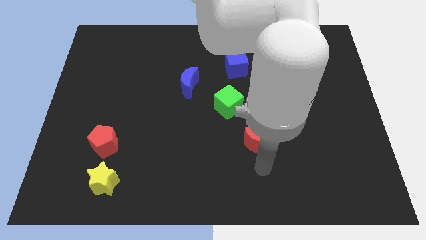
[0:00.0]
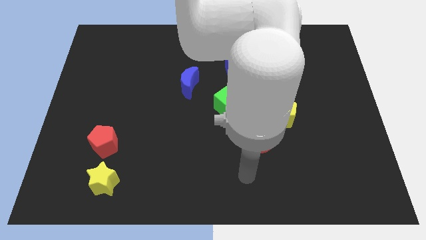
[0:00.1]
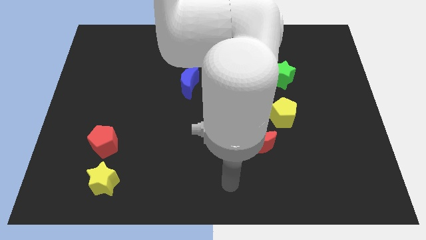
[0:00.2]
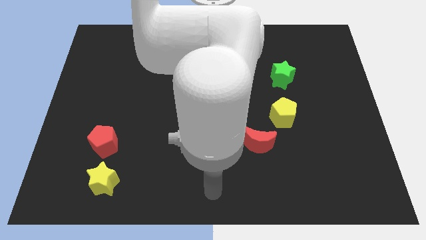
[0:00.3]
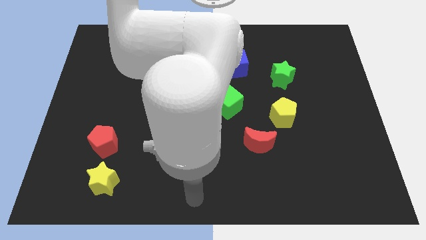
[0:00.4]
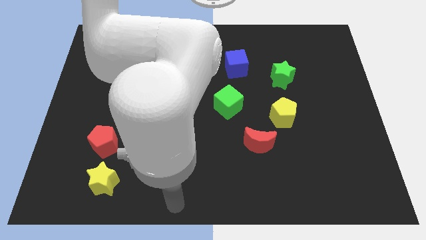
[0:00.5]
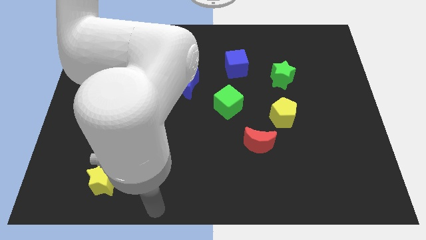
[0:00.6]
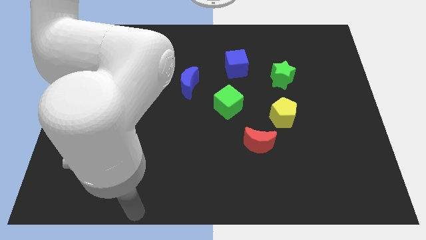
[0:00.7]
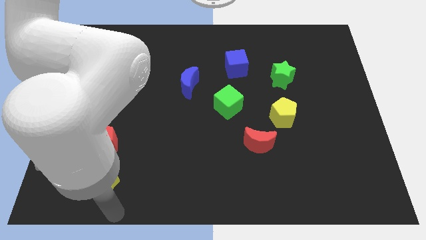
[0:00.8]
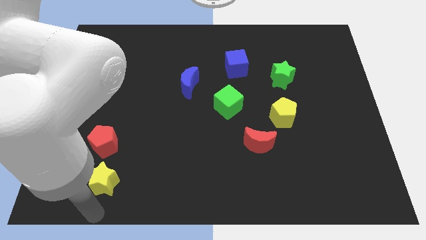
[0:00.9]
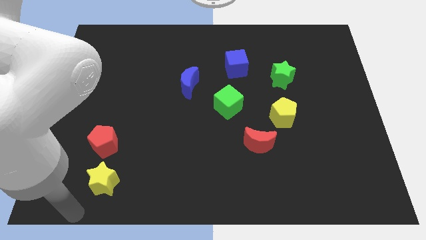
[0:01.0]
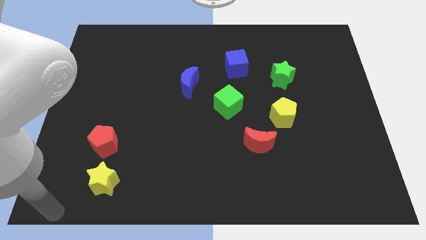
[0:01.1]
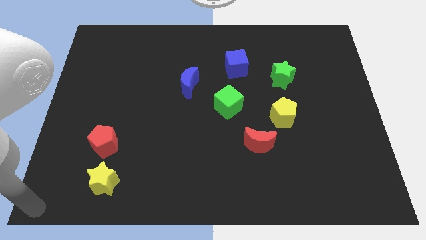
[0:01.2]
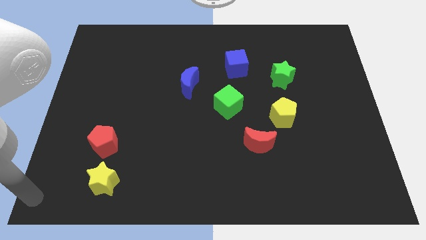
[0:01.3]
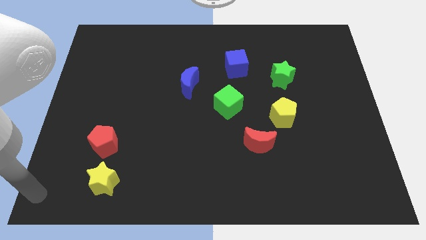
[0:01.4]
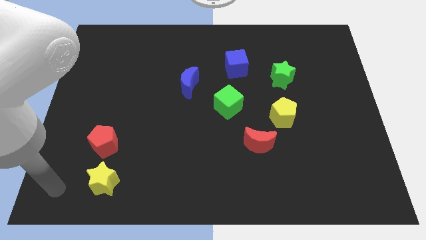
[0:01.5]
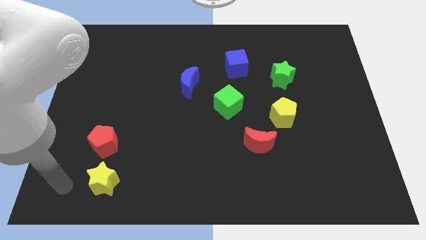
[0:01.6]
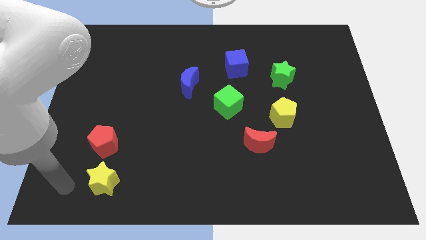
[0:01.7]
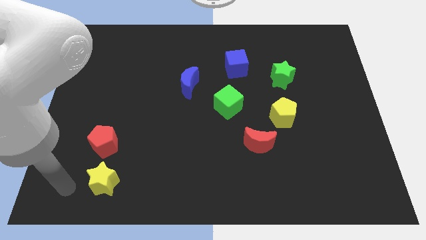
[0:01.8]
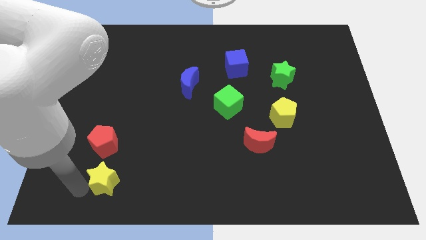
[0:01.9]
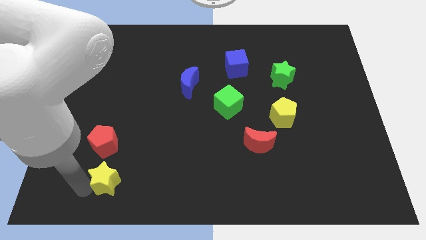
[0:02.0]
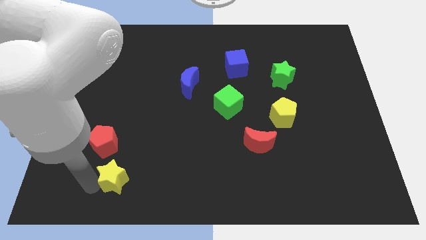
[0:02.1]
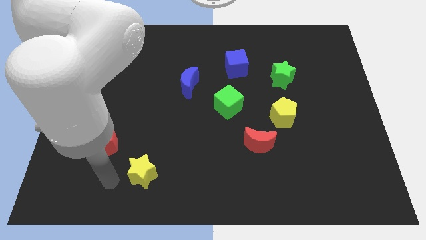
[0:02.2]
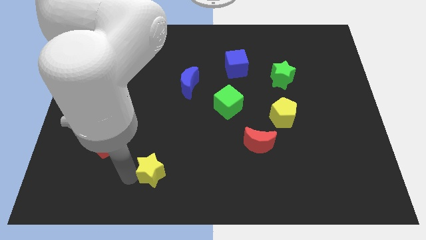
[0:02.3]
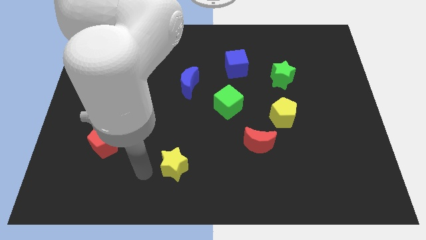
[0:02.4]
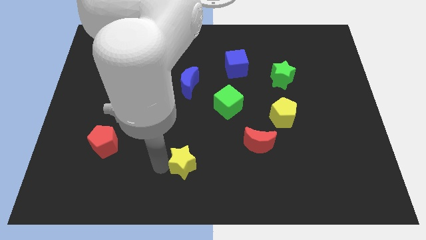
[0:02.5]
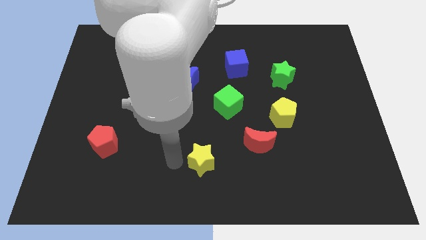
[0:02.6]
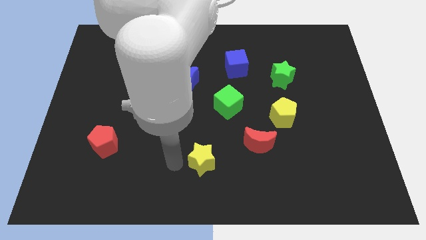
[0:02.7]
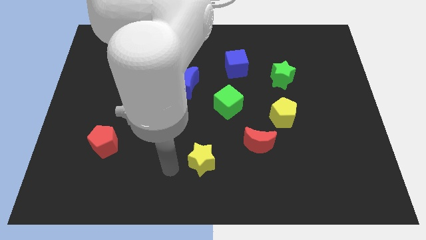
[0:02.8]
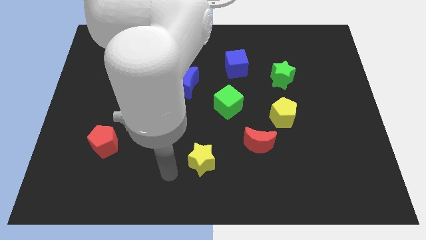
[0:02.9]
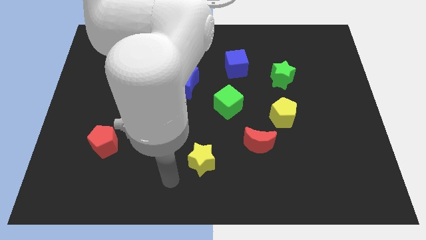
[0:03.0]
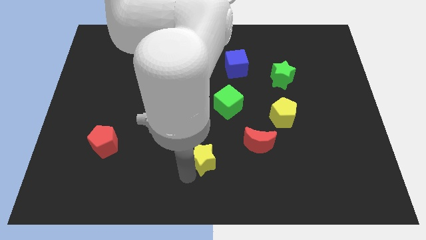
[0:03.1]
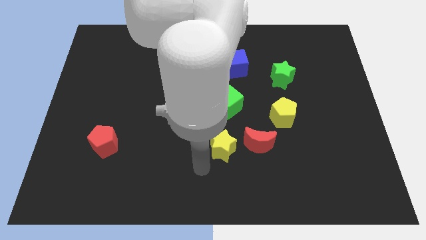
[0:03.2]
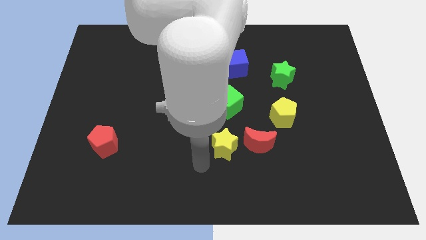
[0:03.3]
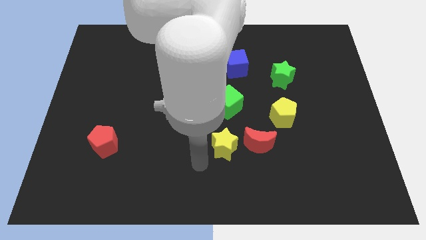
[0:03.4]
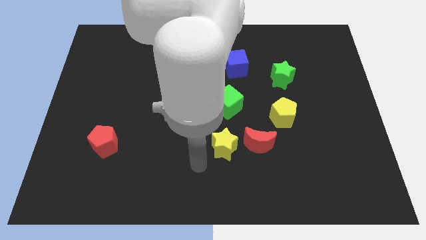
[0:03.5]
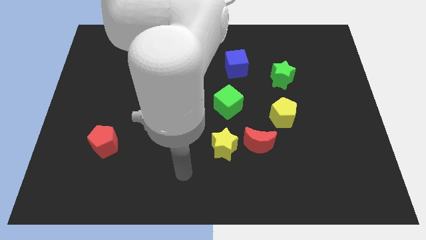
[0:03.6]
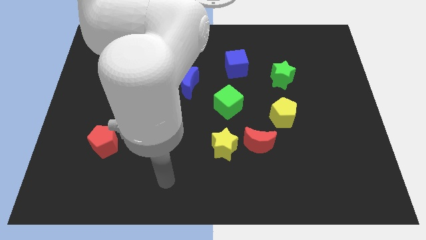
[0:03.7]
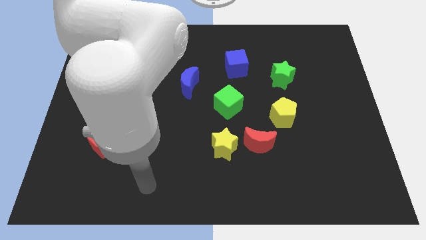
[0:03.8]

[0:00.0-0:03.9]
push the yellow star to the left side of the red crescent

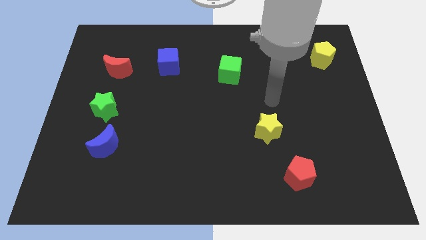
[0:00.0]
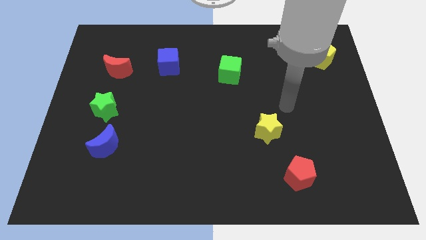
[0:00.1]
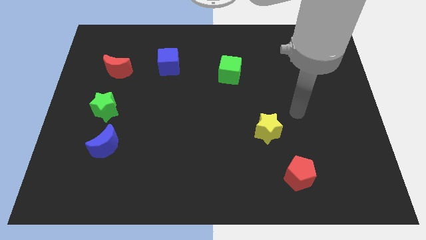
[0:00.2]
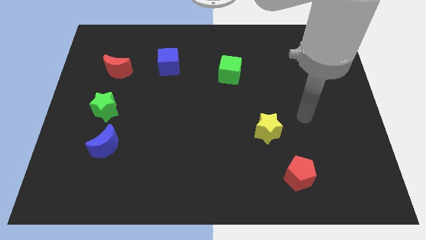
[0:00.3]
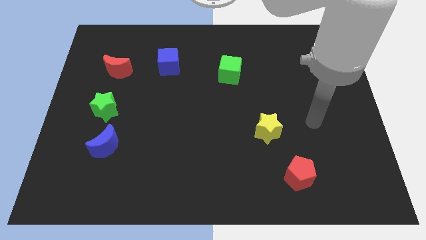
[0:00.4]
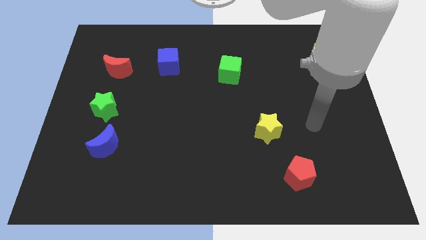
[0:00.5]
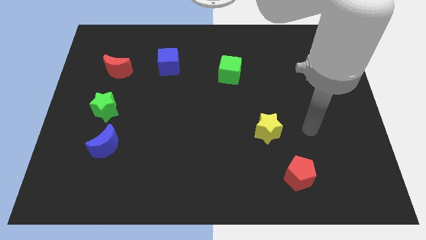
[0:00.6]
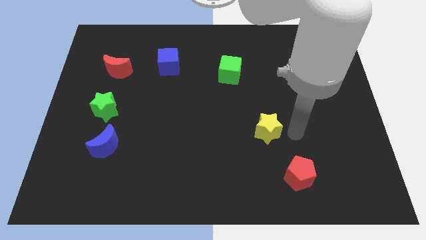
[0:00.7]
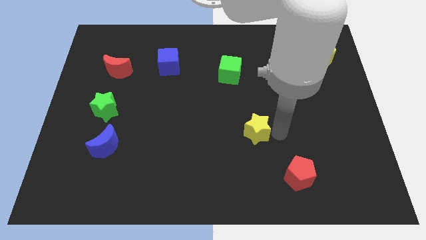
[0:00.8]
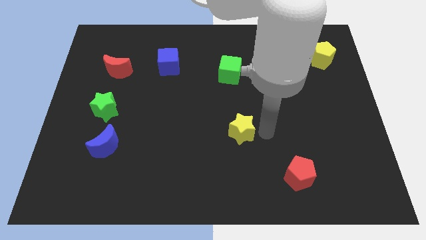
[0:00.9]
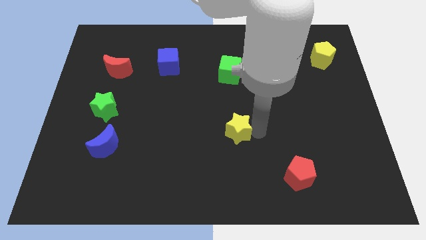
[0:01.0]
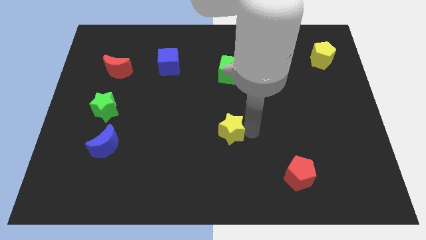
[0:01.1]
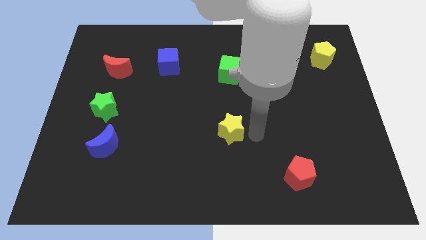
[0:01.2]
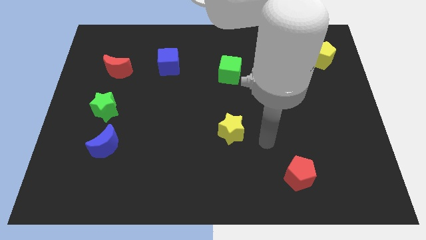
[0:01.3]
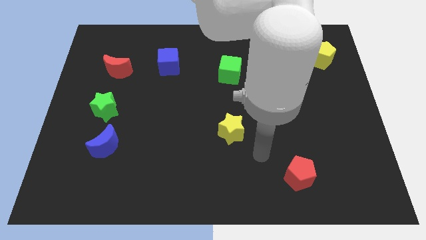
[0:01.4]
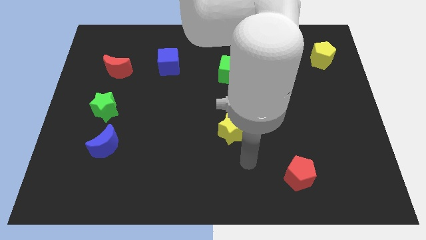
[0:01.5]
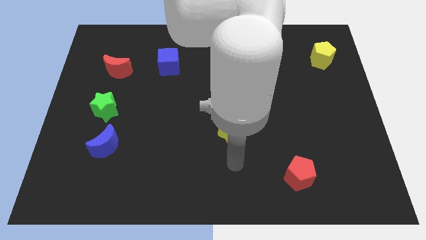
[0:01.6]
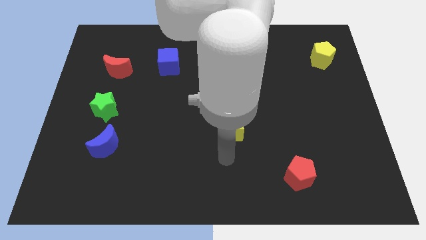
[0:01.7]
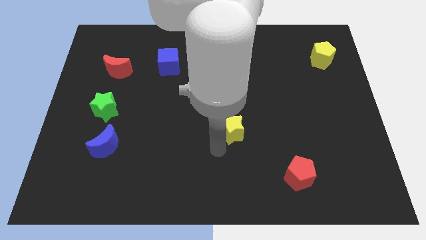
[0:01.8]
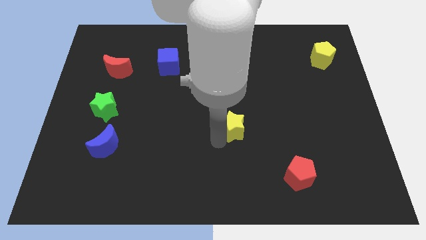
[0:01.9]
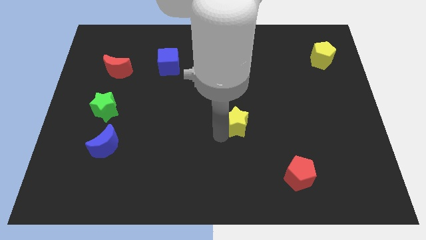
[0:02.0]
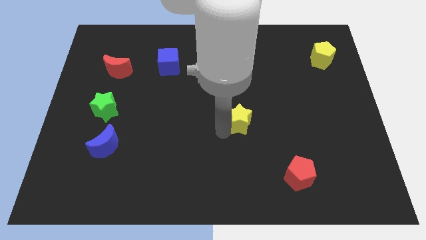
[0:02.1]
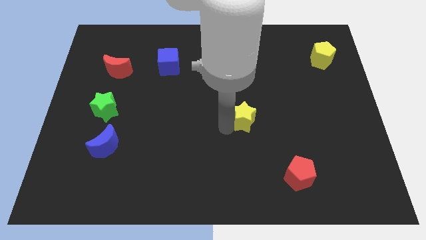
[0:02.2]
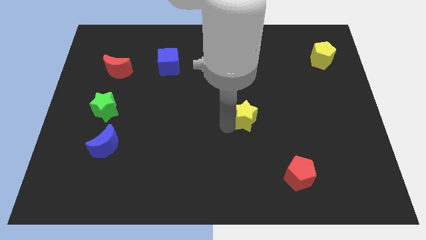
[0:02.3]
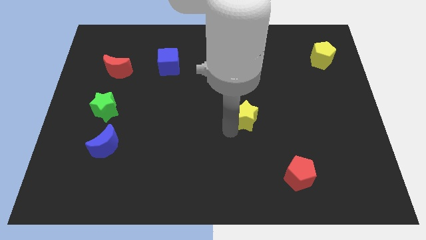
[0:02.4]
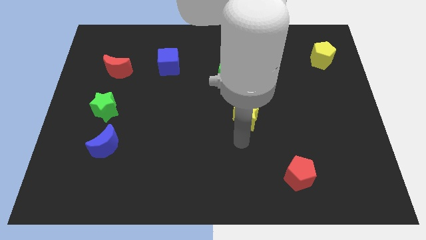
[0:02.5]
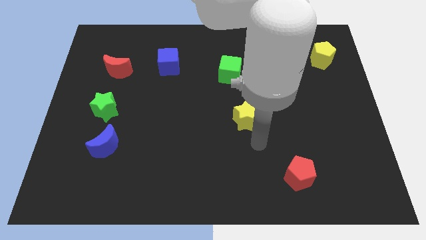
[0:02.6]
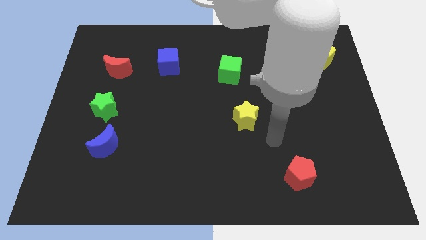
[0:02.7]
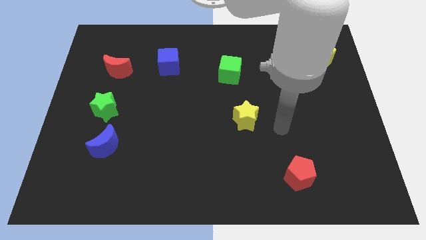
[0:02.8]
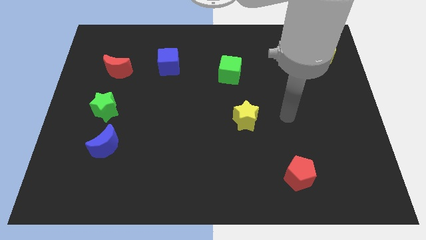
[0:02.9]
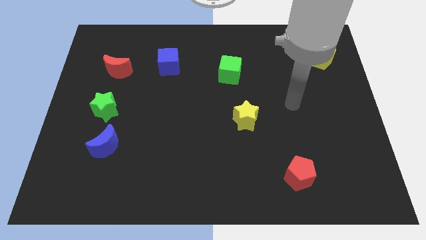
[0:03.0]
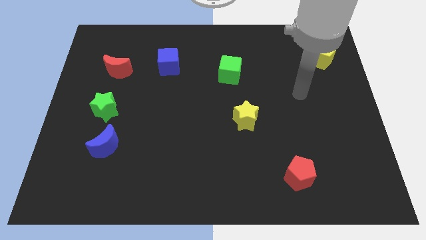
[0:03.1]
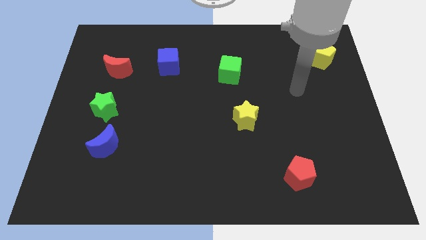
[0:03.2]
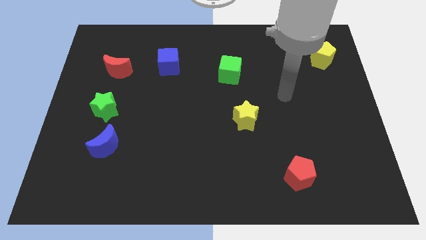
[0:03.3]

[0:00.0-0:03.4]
push yellow star slightly towards top of the board

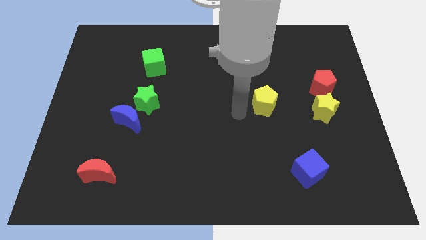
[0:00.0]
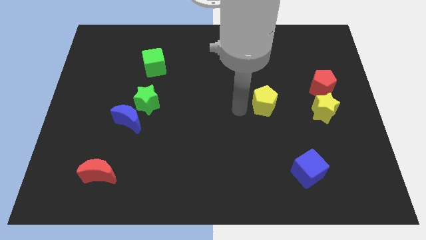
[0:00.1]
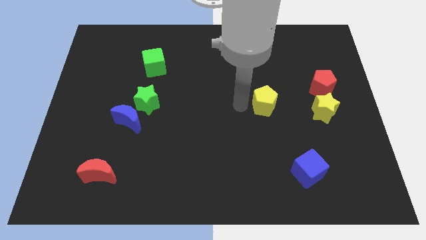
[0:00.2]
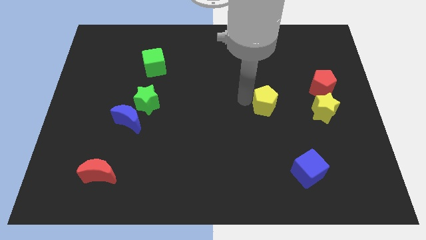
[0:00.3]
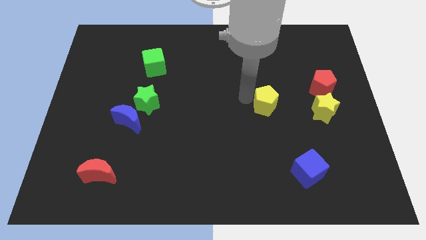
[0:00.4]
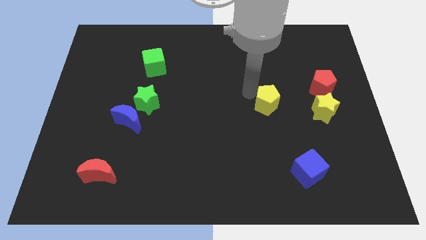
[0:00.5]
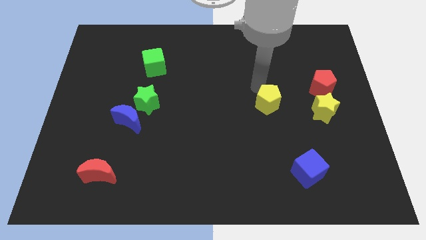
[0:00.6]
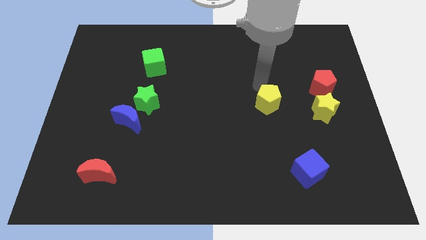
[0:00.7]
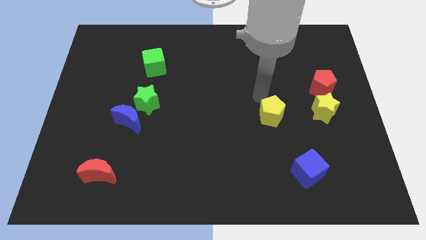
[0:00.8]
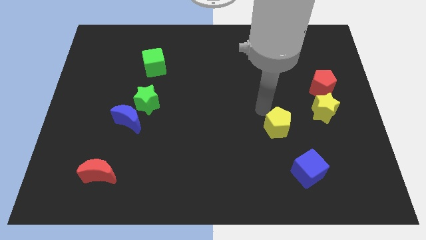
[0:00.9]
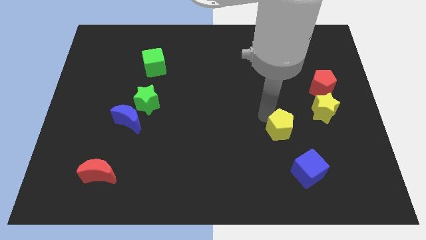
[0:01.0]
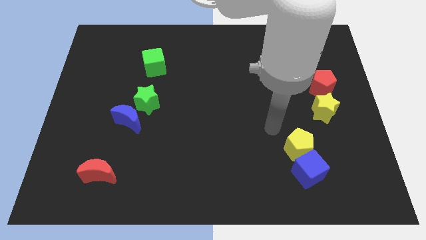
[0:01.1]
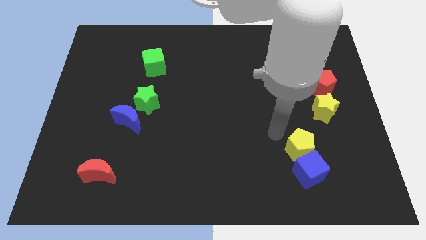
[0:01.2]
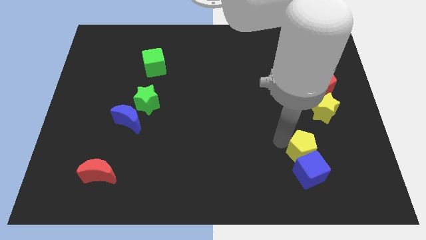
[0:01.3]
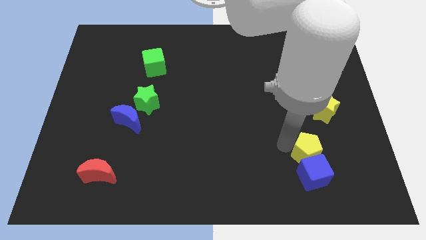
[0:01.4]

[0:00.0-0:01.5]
push the yellow pentagon to the top left side of the blue cube

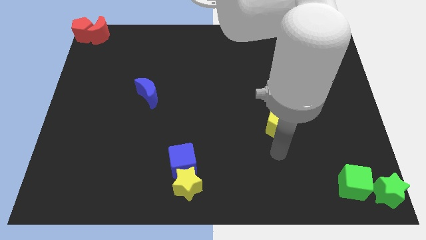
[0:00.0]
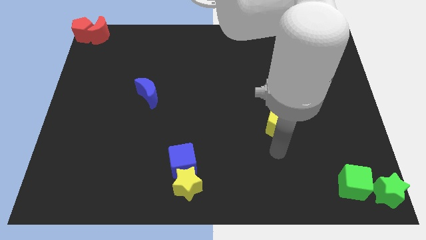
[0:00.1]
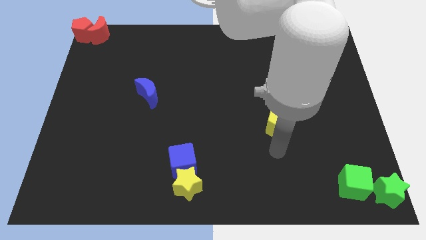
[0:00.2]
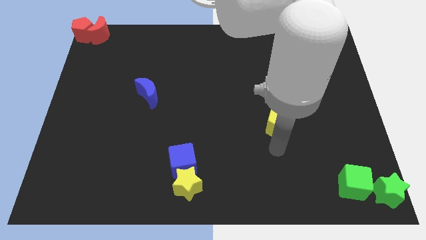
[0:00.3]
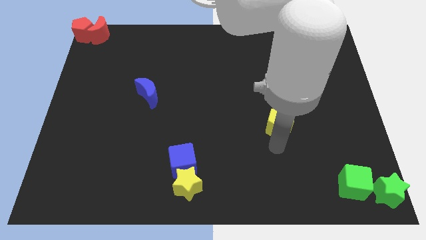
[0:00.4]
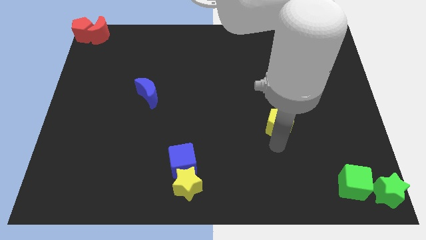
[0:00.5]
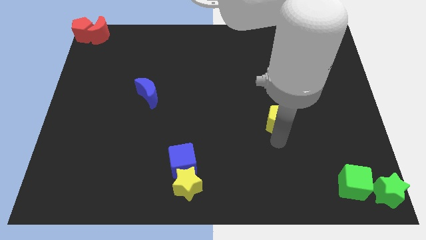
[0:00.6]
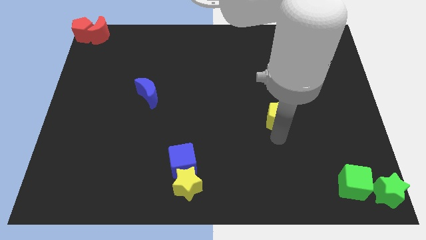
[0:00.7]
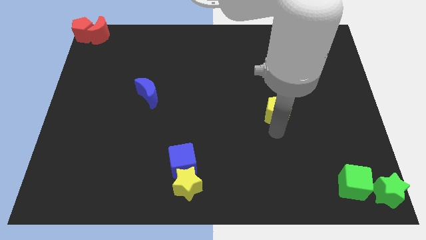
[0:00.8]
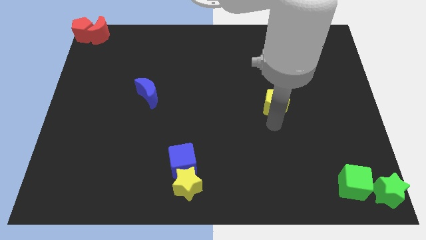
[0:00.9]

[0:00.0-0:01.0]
move the yellow pentagon slightly upwards
